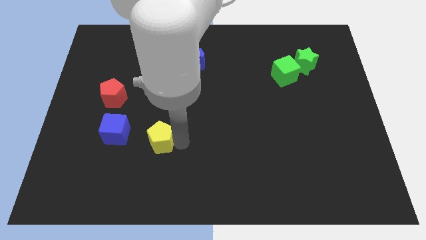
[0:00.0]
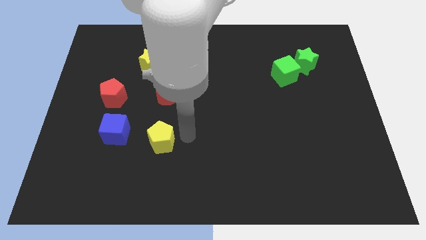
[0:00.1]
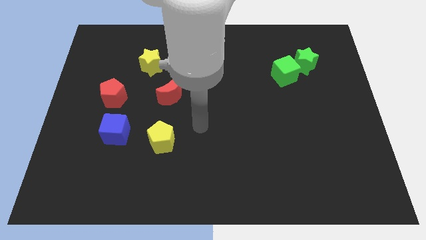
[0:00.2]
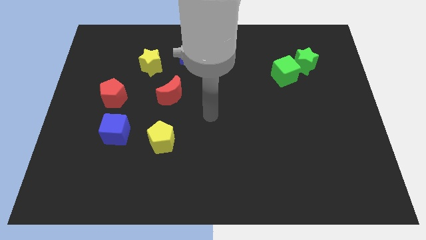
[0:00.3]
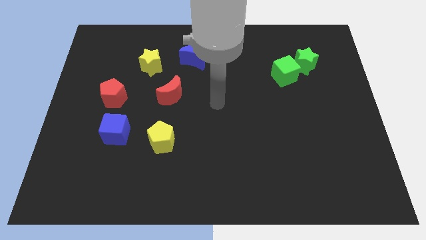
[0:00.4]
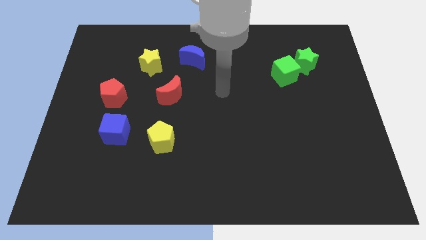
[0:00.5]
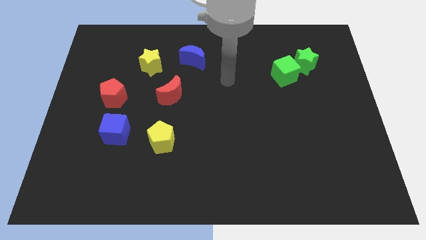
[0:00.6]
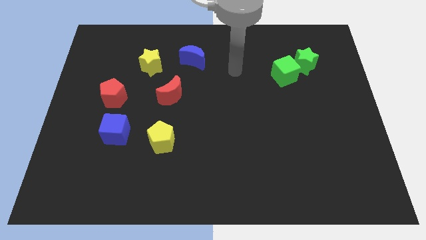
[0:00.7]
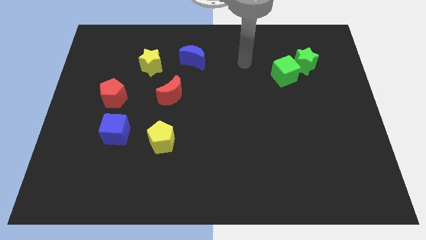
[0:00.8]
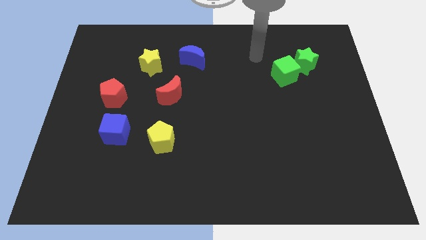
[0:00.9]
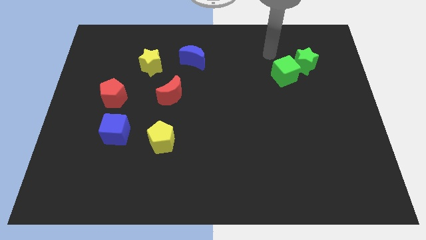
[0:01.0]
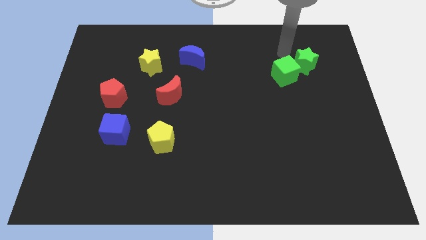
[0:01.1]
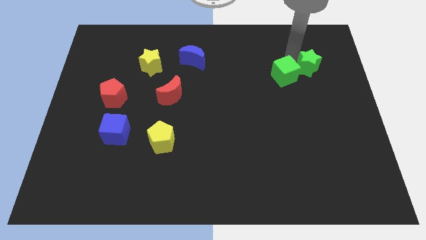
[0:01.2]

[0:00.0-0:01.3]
move your arm away from the yellow pentagon

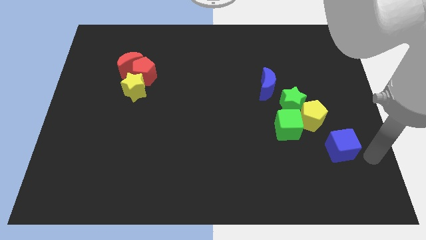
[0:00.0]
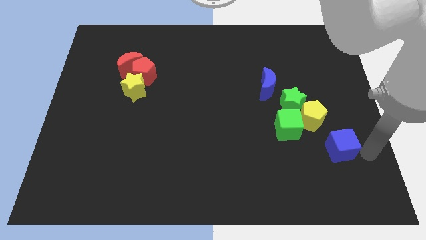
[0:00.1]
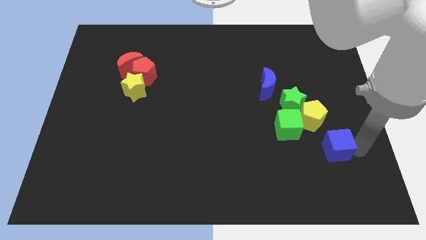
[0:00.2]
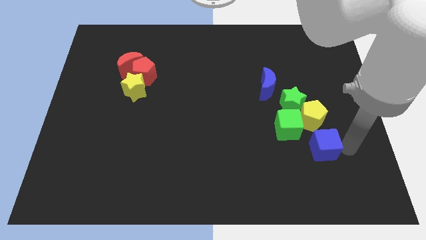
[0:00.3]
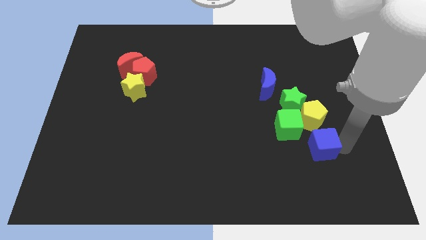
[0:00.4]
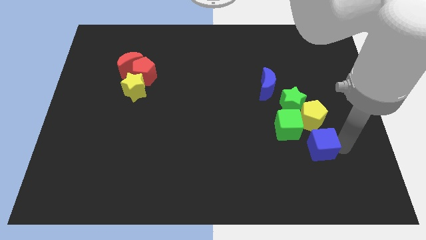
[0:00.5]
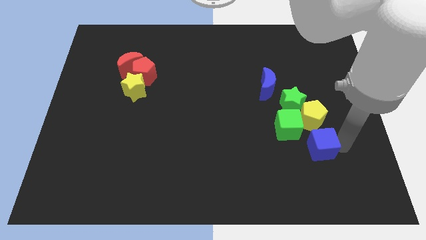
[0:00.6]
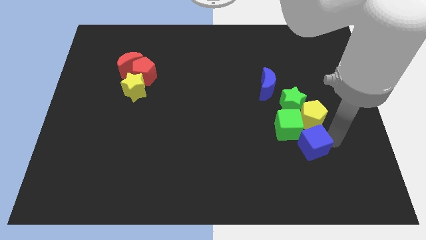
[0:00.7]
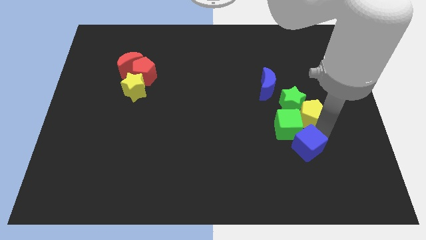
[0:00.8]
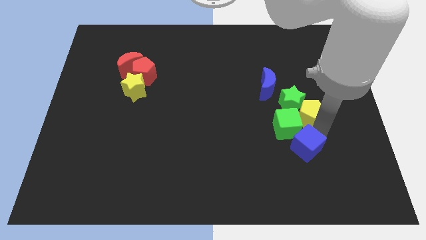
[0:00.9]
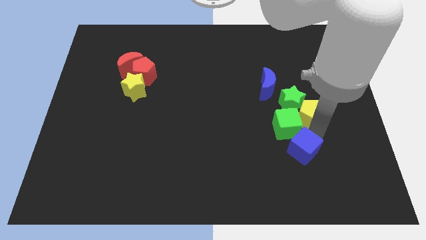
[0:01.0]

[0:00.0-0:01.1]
push the blue cube to the group of blocks

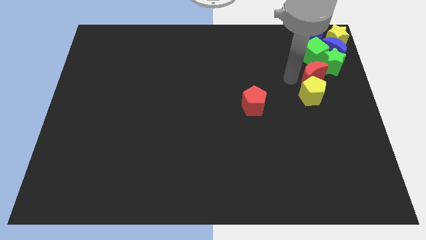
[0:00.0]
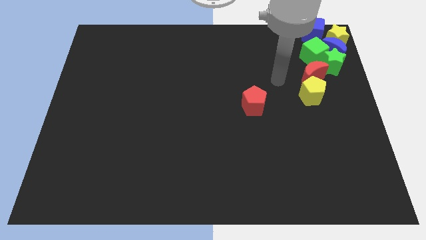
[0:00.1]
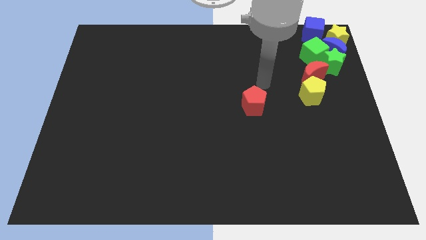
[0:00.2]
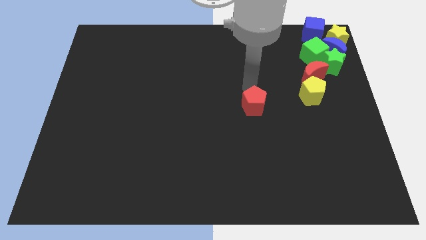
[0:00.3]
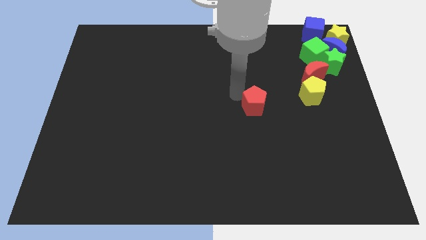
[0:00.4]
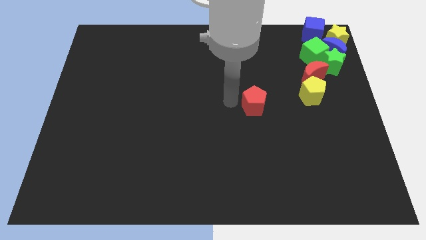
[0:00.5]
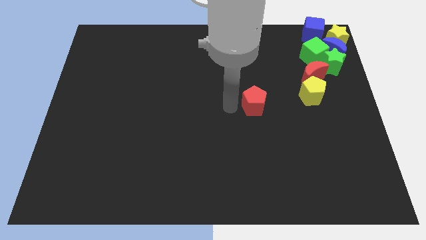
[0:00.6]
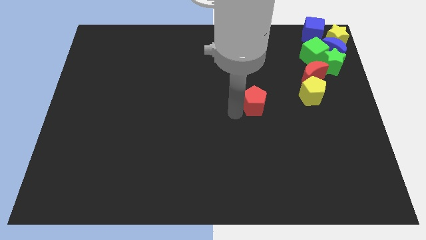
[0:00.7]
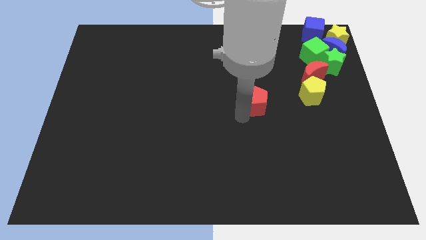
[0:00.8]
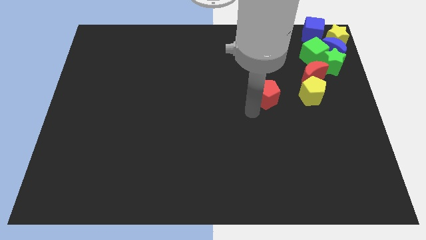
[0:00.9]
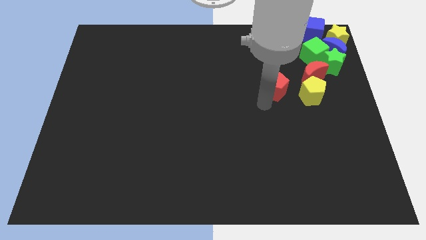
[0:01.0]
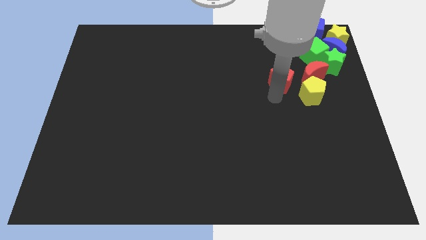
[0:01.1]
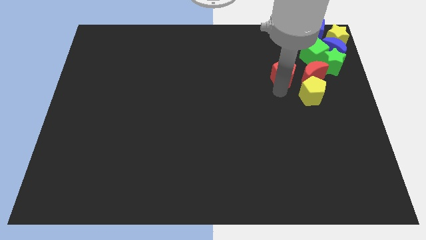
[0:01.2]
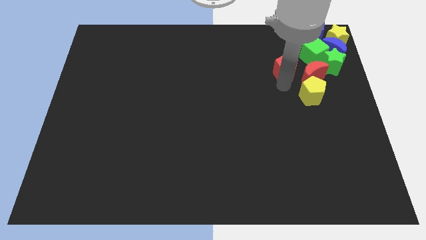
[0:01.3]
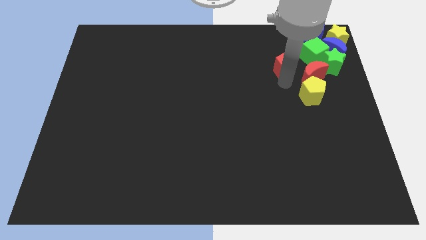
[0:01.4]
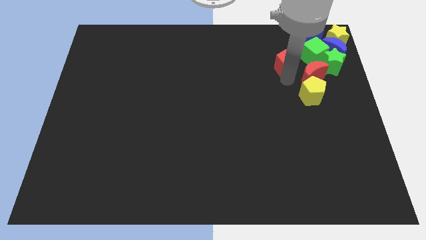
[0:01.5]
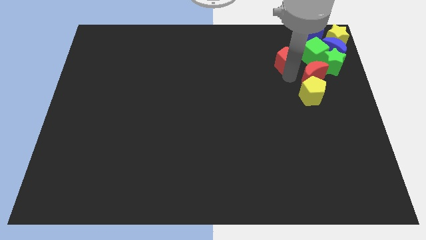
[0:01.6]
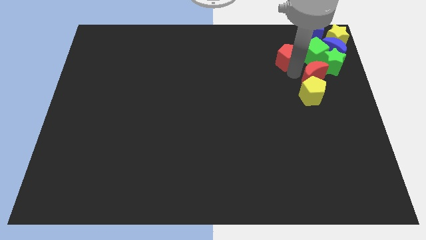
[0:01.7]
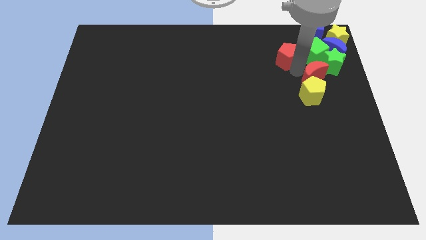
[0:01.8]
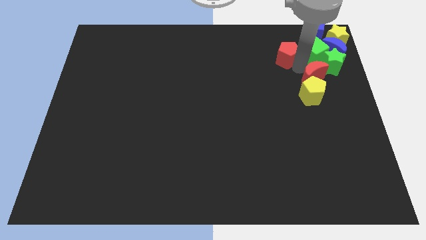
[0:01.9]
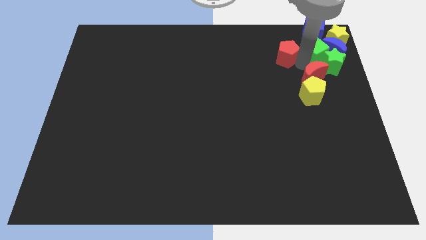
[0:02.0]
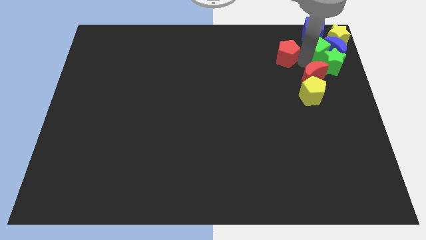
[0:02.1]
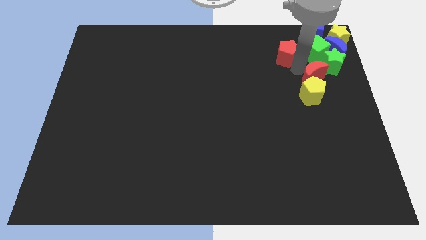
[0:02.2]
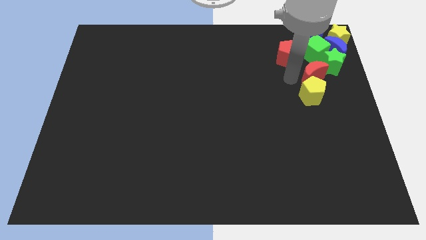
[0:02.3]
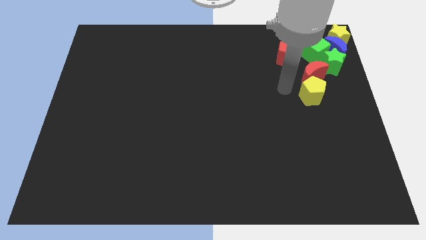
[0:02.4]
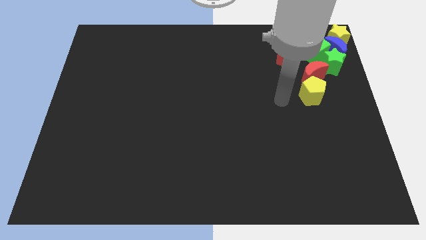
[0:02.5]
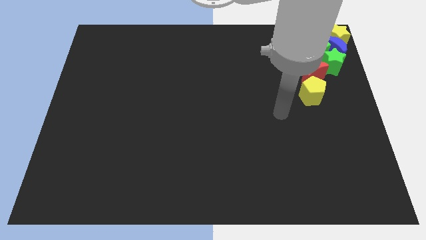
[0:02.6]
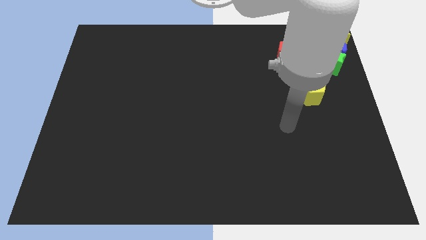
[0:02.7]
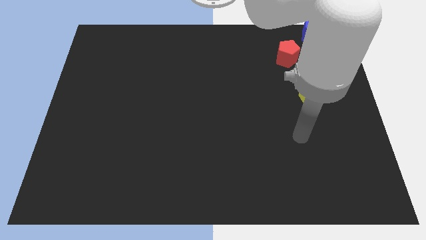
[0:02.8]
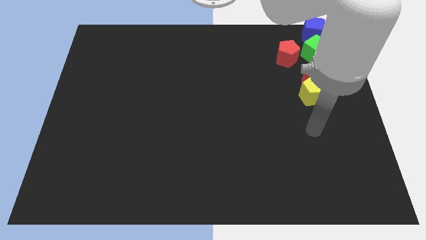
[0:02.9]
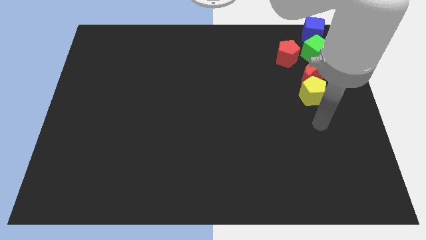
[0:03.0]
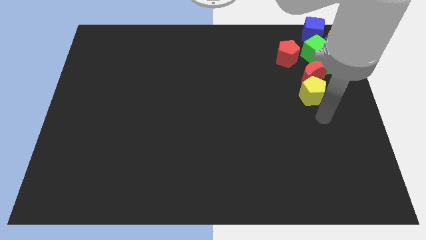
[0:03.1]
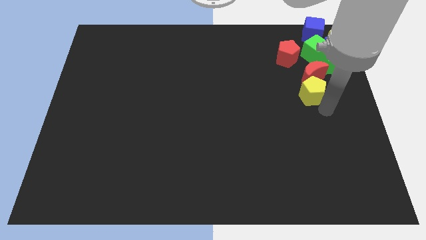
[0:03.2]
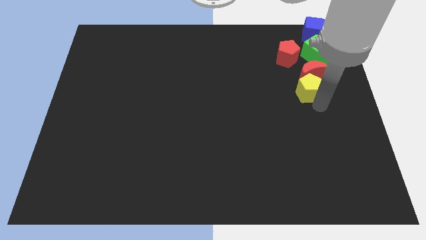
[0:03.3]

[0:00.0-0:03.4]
push the red pentagon to the left side of the green cube

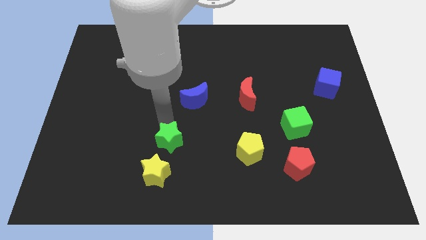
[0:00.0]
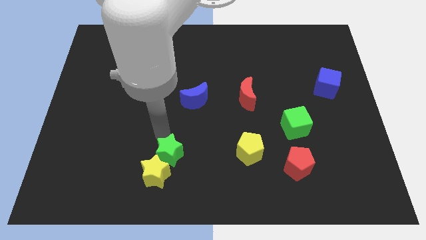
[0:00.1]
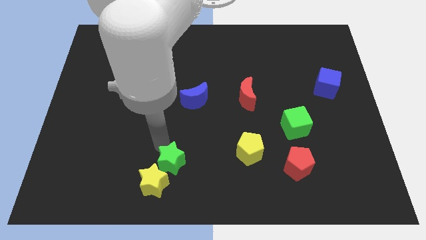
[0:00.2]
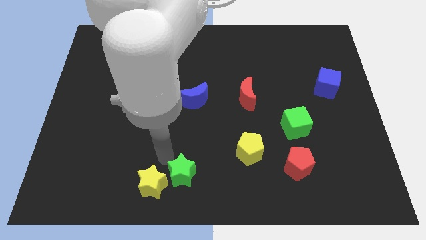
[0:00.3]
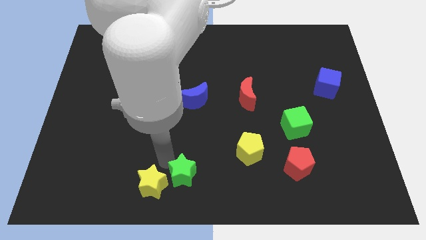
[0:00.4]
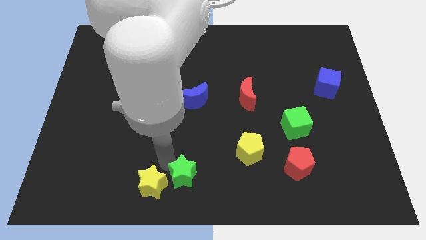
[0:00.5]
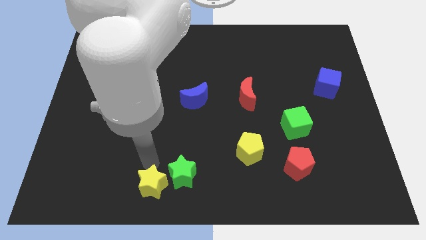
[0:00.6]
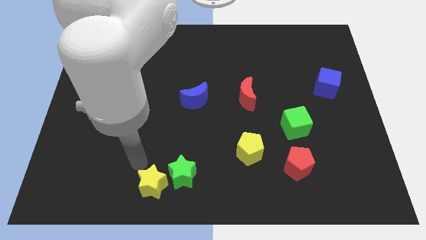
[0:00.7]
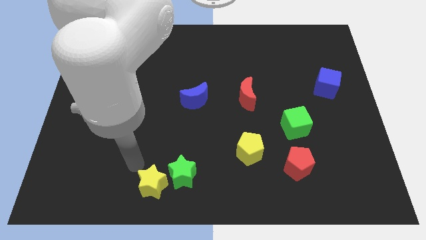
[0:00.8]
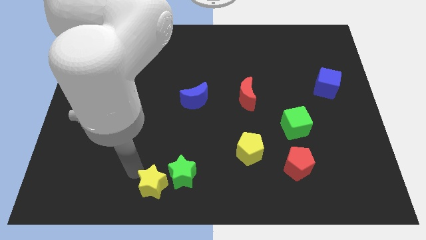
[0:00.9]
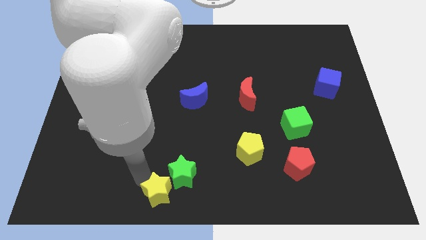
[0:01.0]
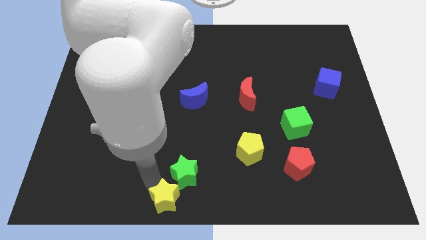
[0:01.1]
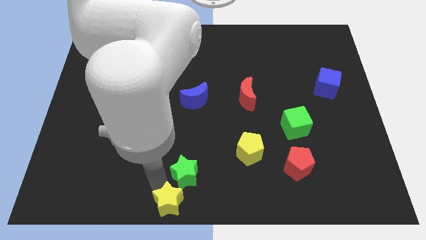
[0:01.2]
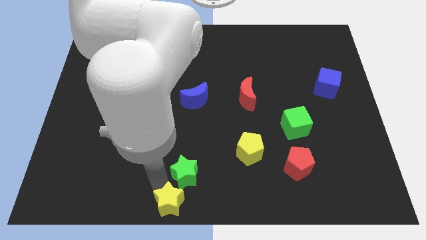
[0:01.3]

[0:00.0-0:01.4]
push the green star and yellow star towards the bottom left of the board

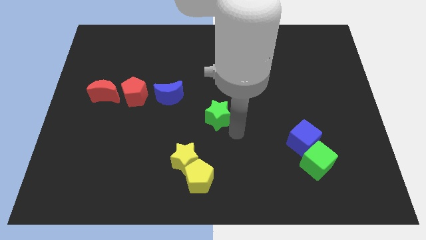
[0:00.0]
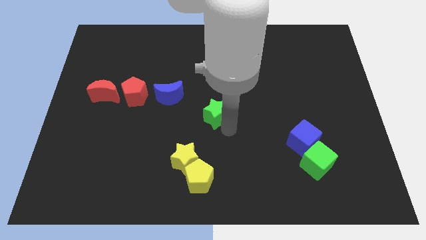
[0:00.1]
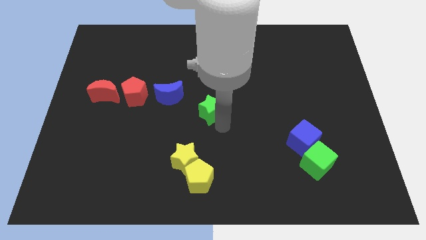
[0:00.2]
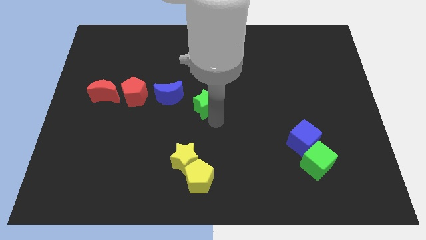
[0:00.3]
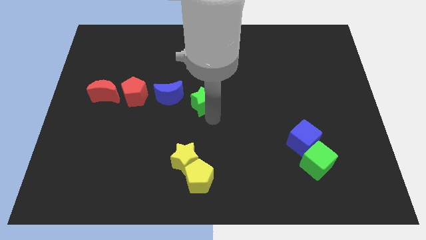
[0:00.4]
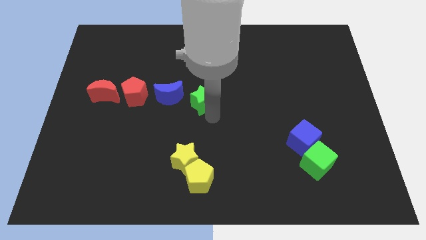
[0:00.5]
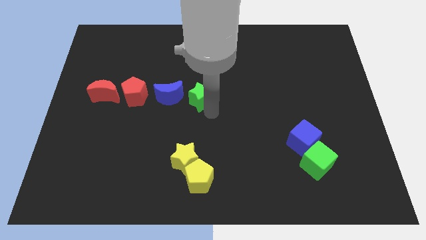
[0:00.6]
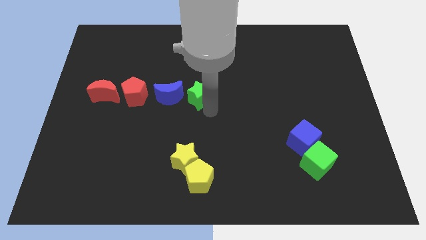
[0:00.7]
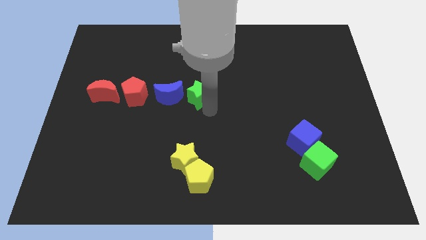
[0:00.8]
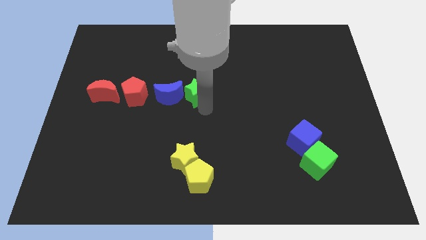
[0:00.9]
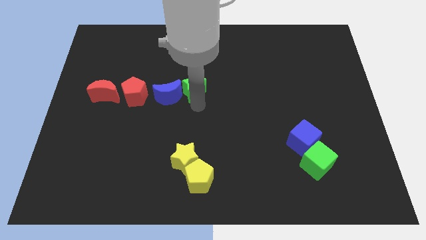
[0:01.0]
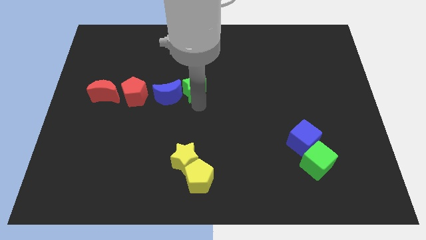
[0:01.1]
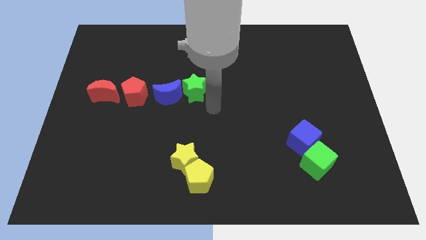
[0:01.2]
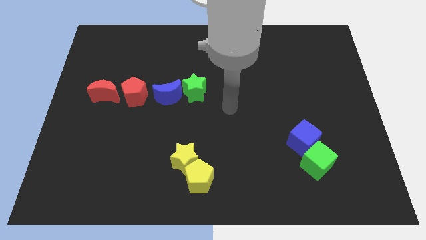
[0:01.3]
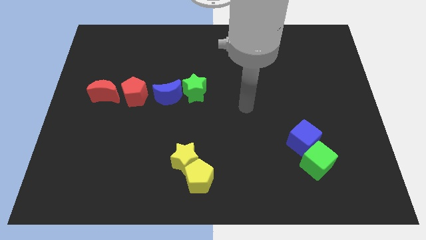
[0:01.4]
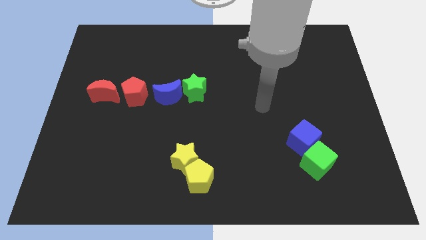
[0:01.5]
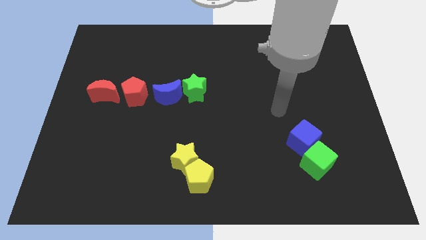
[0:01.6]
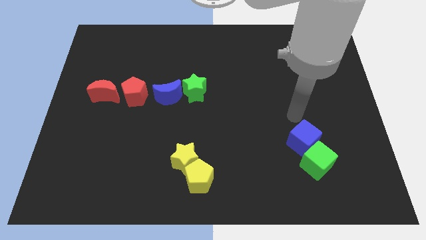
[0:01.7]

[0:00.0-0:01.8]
place green star above the yellow star
